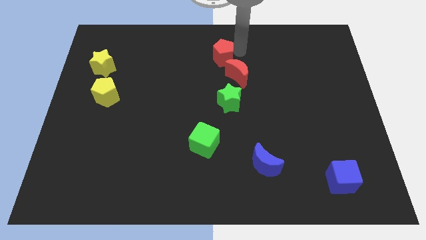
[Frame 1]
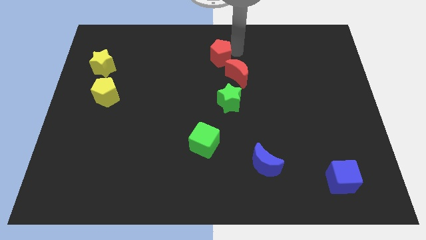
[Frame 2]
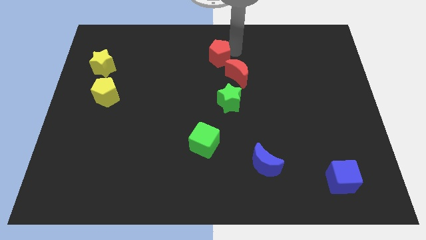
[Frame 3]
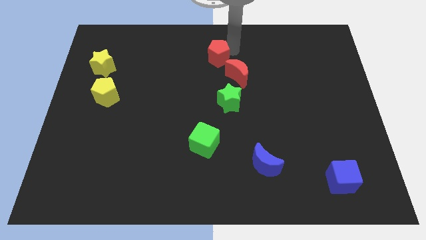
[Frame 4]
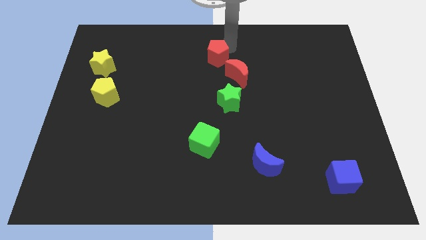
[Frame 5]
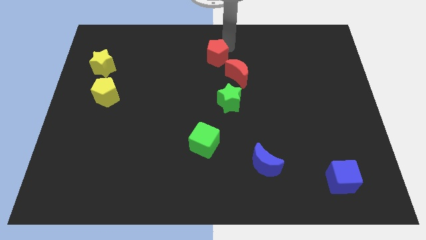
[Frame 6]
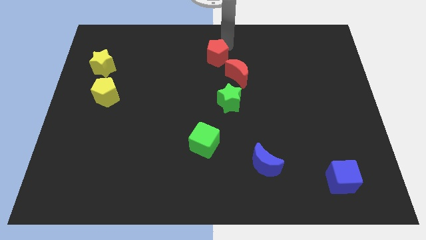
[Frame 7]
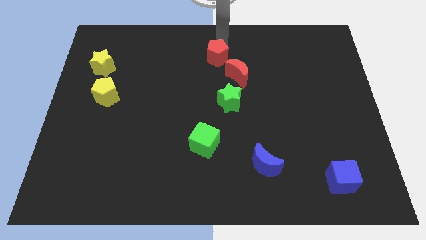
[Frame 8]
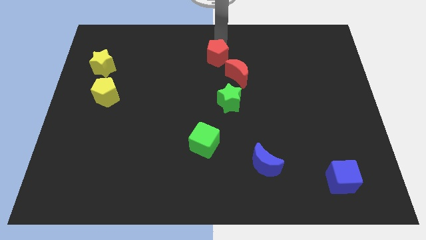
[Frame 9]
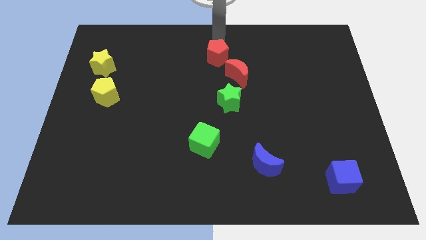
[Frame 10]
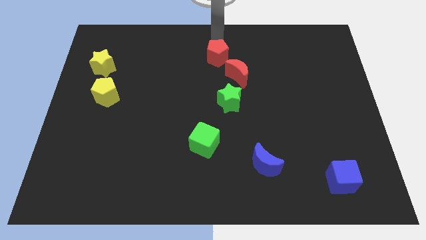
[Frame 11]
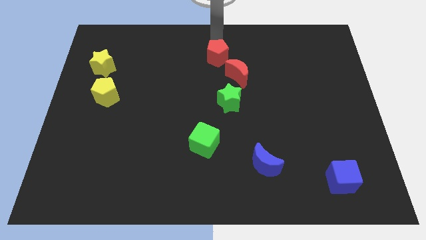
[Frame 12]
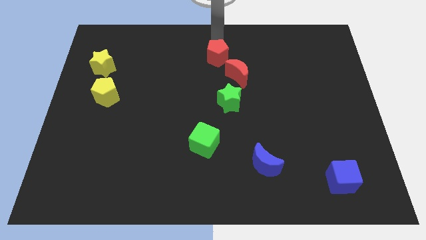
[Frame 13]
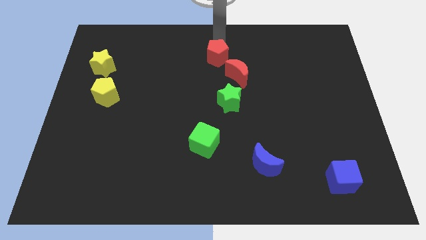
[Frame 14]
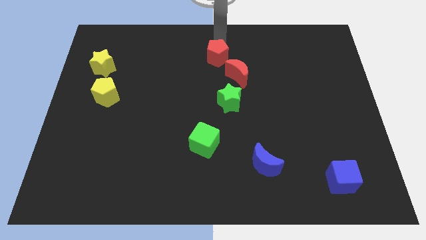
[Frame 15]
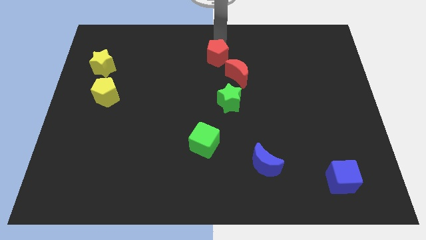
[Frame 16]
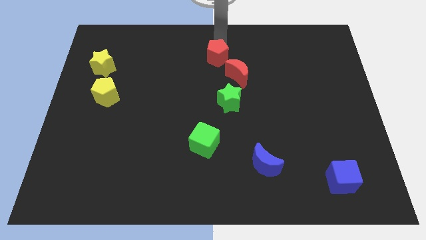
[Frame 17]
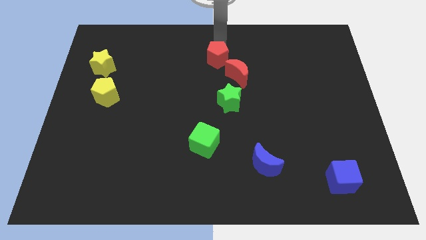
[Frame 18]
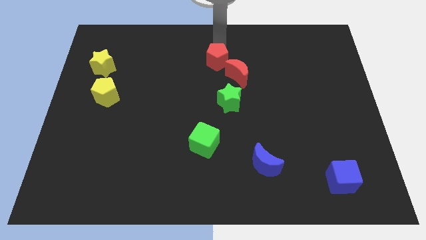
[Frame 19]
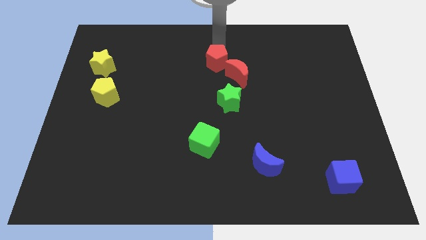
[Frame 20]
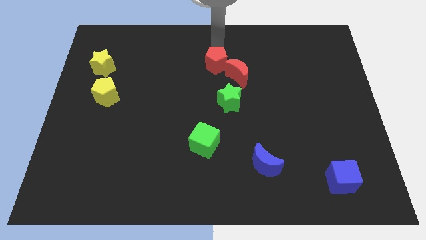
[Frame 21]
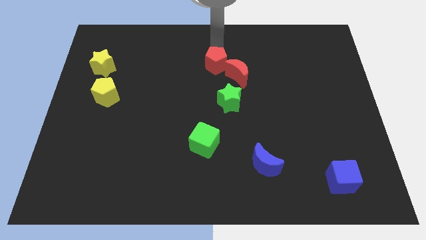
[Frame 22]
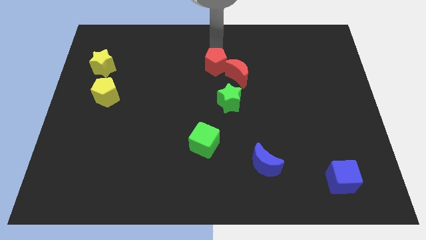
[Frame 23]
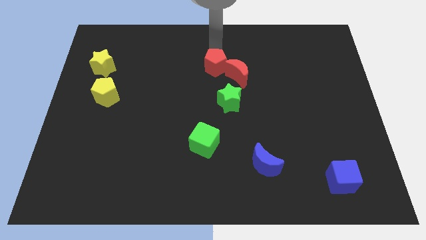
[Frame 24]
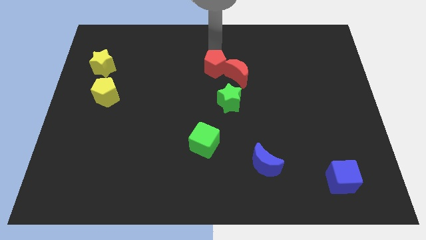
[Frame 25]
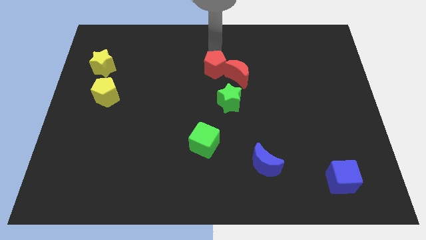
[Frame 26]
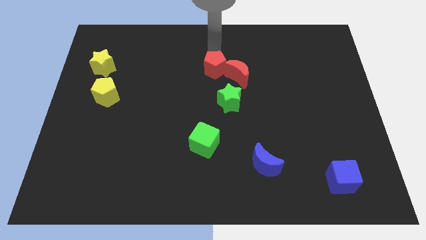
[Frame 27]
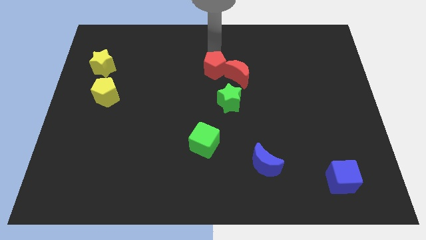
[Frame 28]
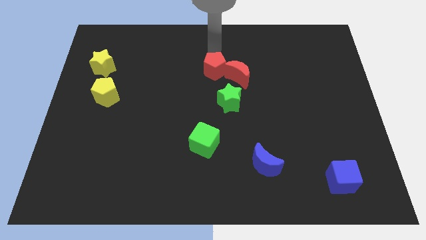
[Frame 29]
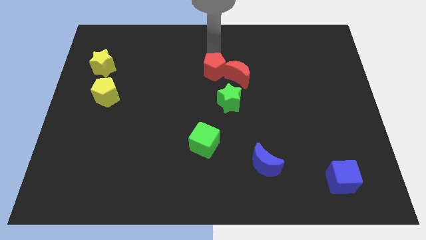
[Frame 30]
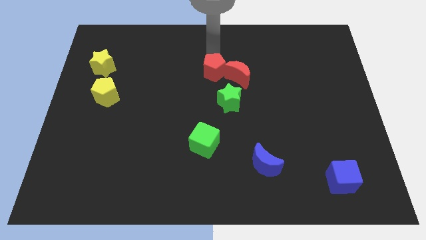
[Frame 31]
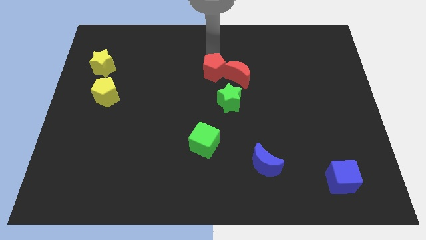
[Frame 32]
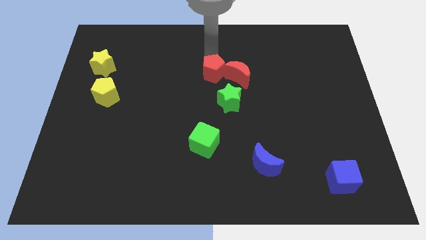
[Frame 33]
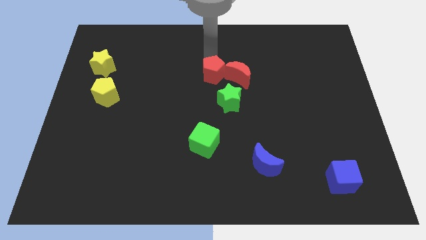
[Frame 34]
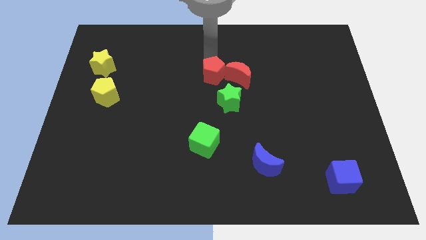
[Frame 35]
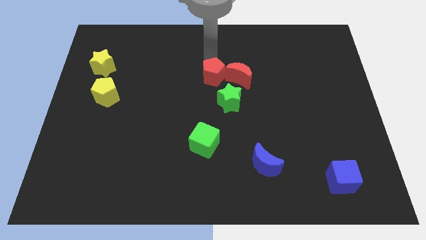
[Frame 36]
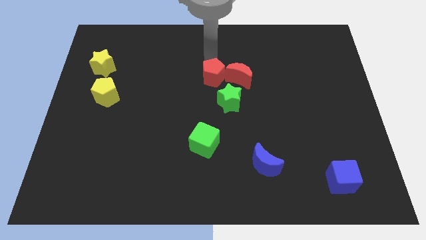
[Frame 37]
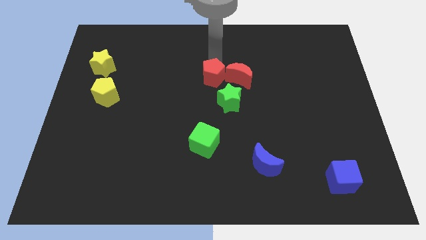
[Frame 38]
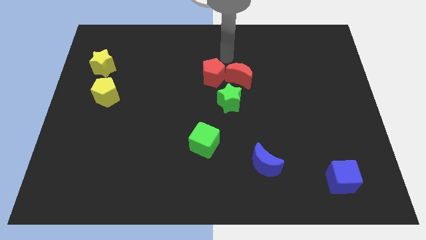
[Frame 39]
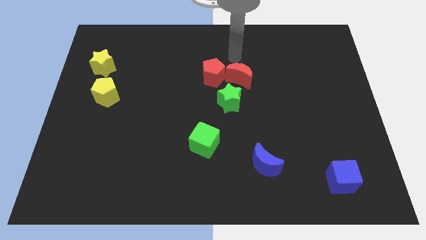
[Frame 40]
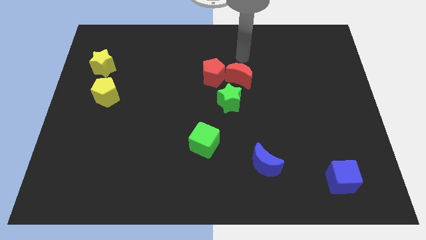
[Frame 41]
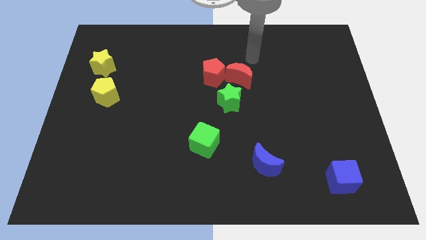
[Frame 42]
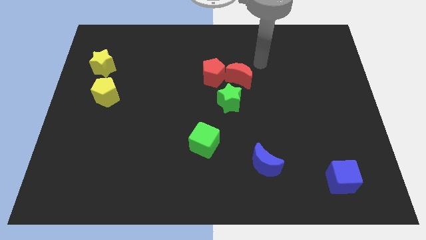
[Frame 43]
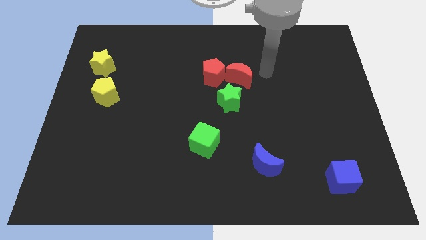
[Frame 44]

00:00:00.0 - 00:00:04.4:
push the red pentagon to the left of the red crescent

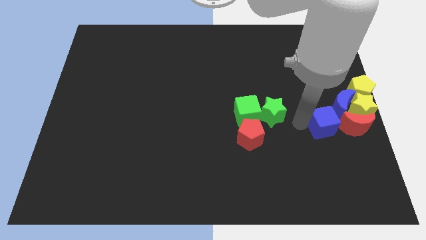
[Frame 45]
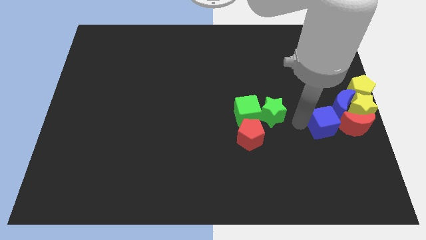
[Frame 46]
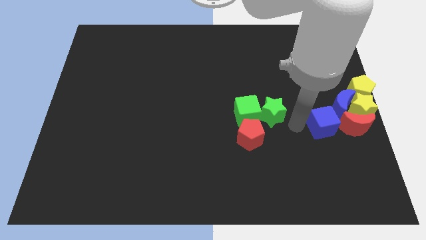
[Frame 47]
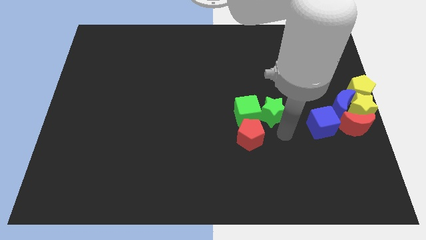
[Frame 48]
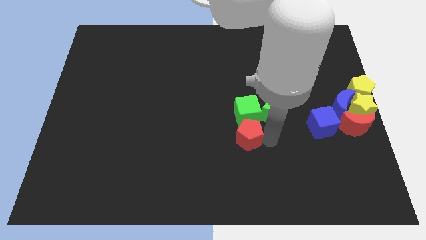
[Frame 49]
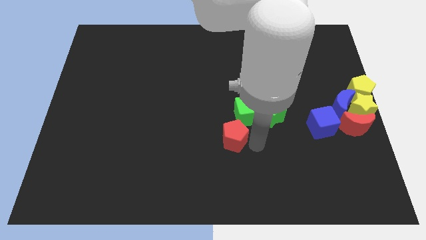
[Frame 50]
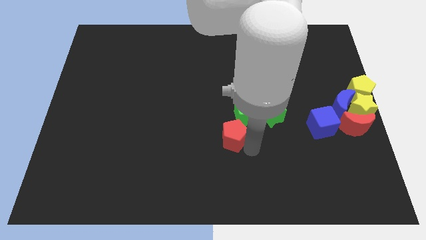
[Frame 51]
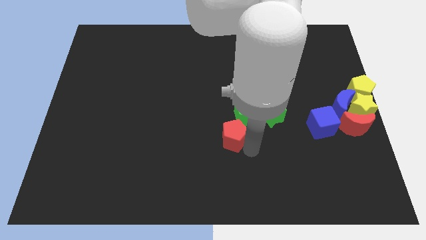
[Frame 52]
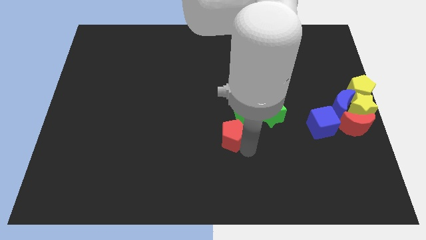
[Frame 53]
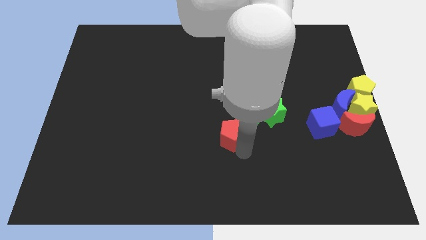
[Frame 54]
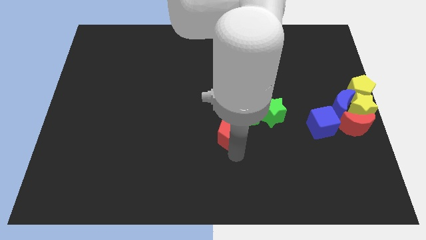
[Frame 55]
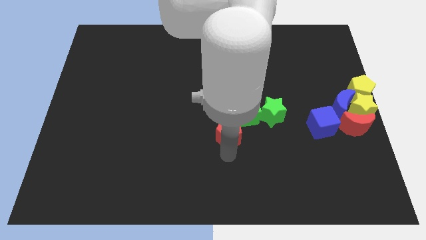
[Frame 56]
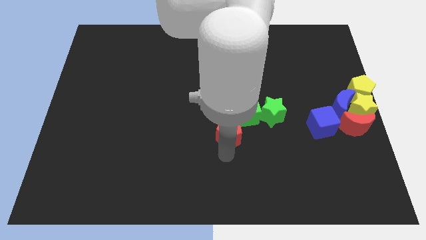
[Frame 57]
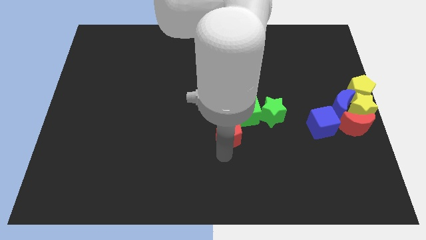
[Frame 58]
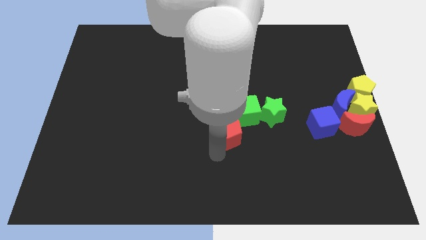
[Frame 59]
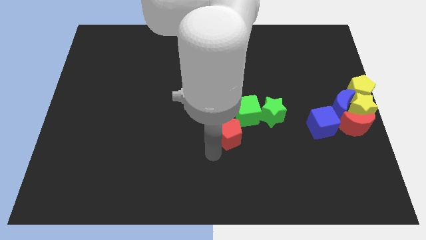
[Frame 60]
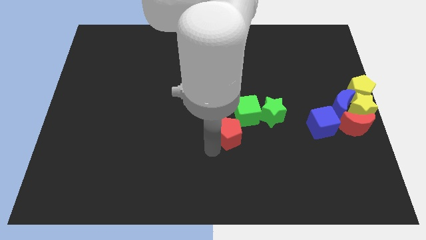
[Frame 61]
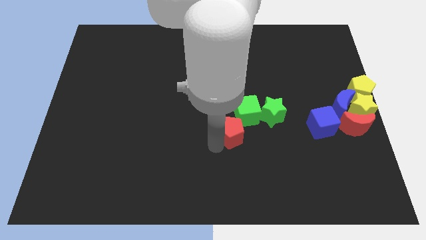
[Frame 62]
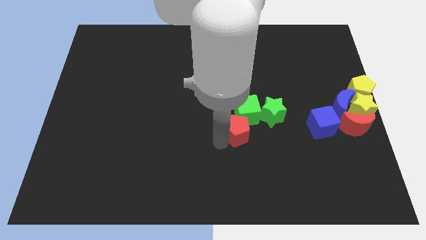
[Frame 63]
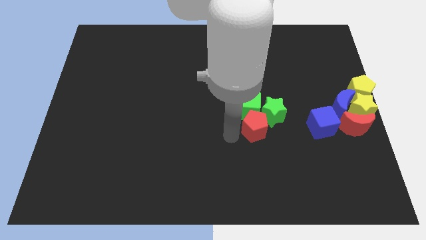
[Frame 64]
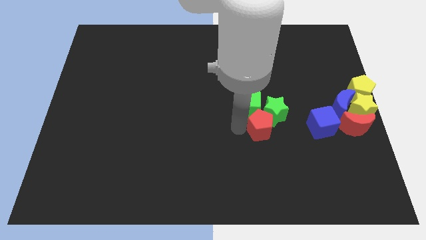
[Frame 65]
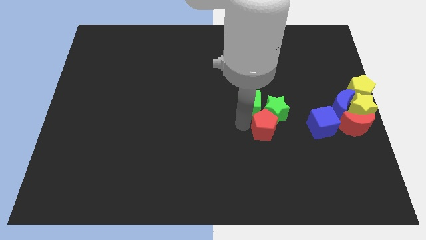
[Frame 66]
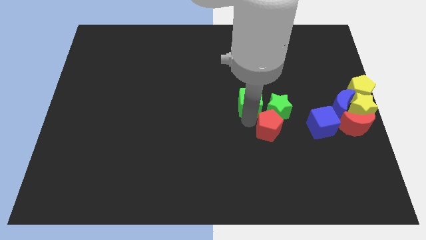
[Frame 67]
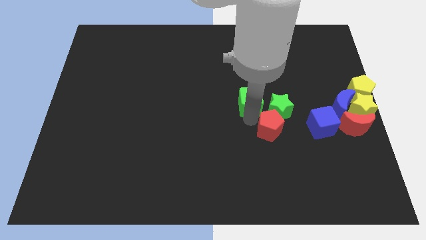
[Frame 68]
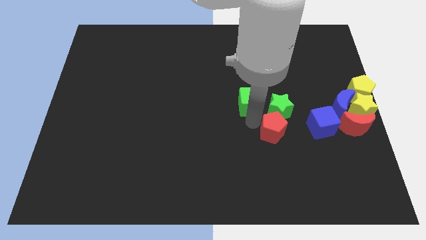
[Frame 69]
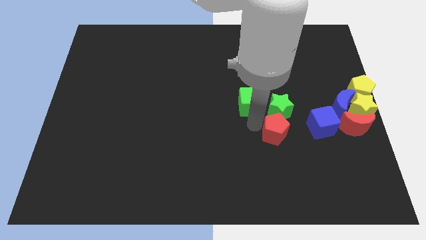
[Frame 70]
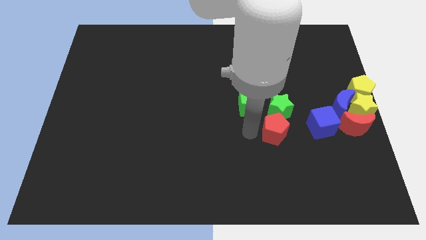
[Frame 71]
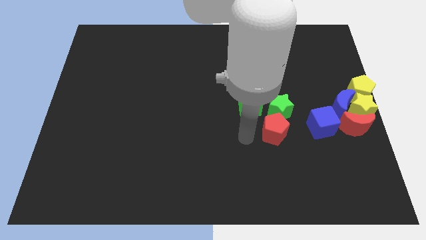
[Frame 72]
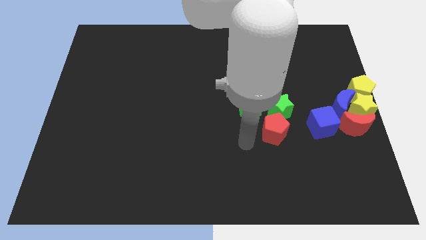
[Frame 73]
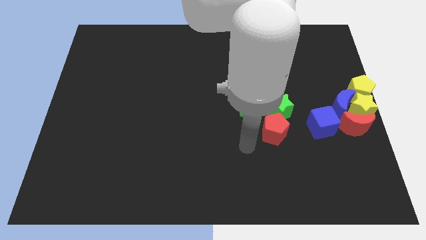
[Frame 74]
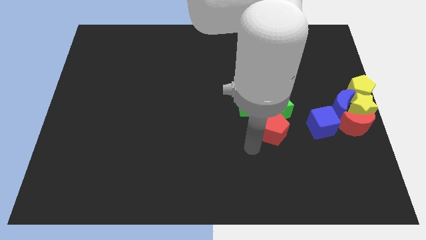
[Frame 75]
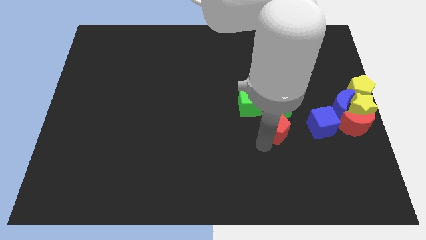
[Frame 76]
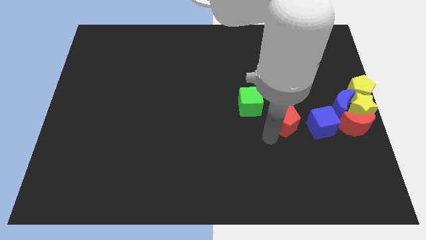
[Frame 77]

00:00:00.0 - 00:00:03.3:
slide the red pentagon into the bottom side of the green star

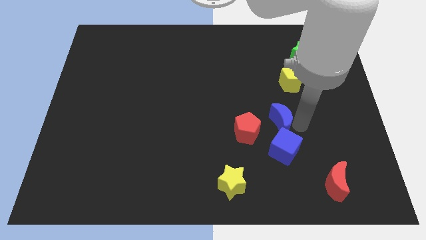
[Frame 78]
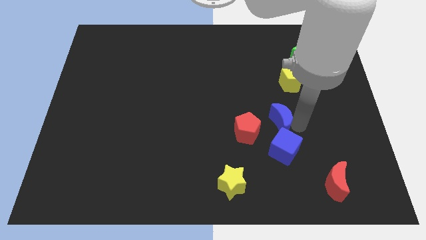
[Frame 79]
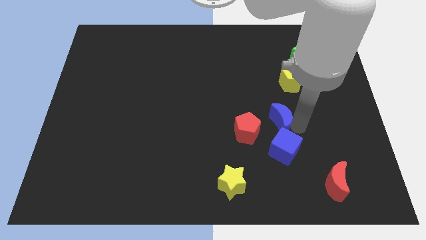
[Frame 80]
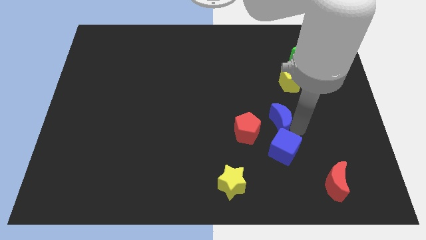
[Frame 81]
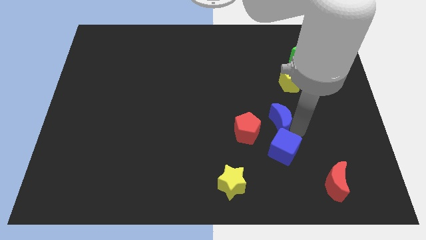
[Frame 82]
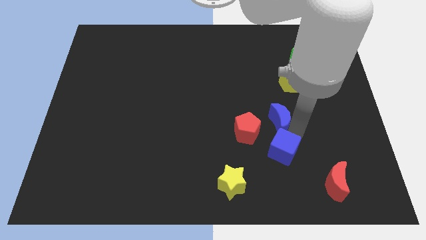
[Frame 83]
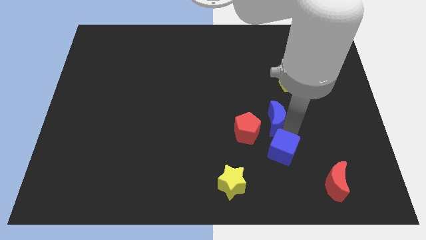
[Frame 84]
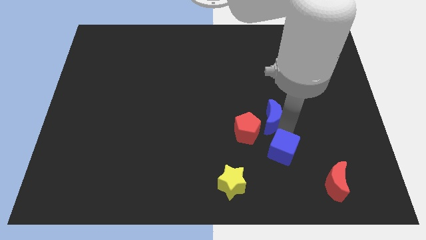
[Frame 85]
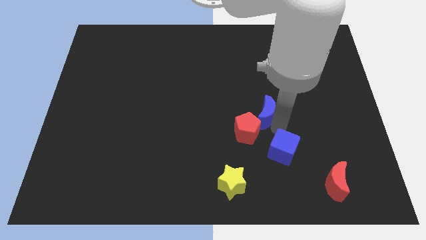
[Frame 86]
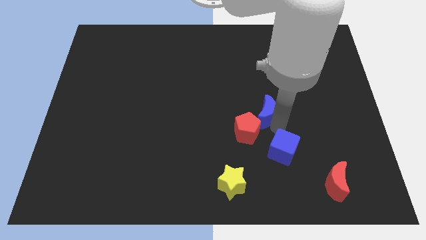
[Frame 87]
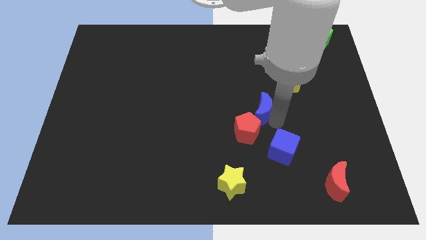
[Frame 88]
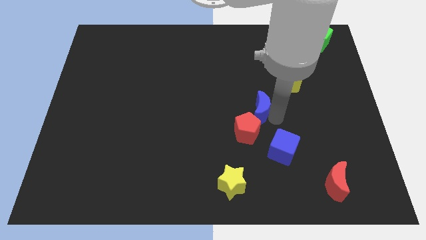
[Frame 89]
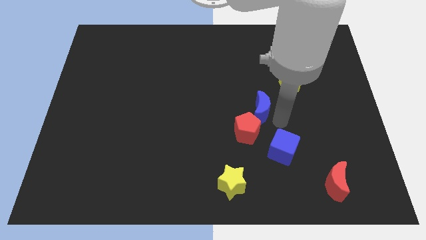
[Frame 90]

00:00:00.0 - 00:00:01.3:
move the blue moon away from the blue cube

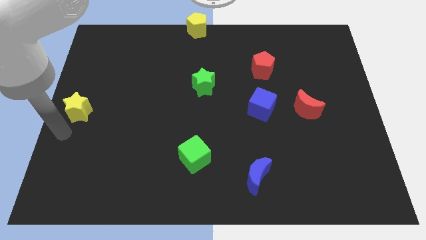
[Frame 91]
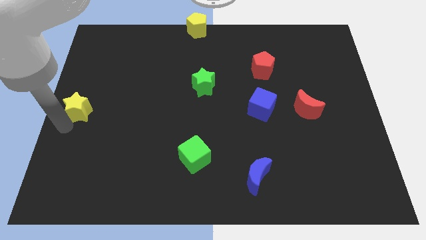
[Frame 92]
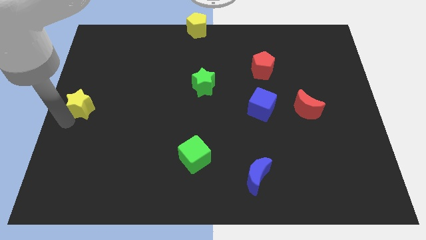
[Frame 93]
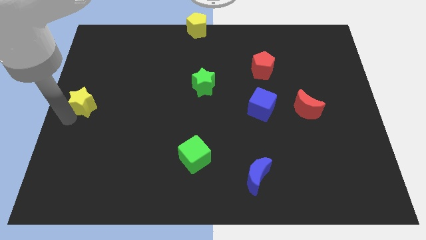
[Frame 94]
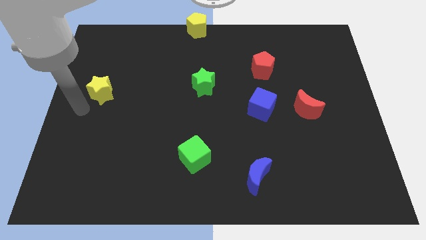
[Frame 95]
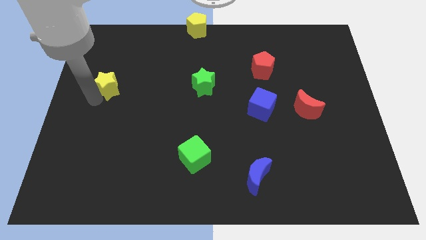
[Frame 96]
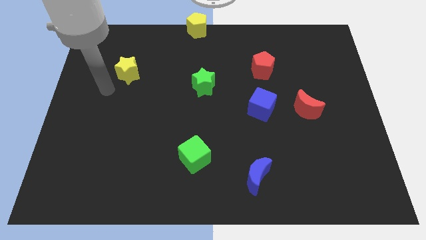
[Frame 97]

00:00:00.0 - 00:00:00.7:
place the yellow star left to the green star
